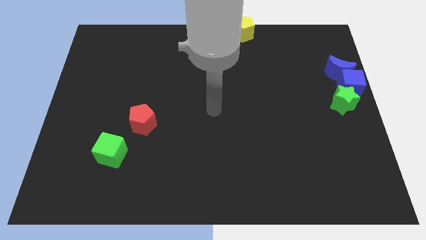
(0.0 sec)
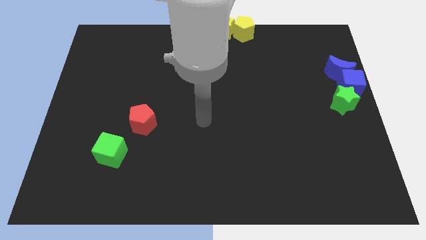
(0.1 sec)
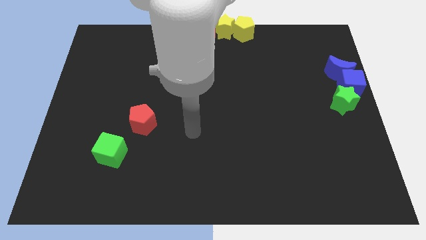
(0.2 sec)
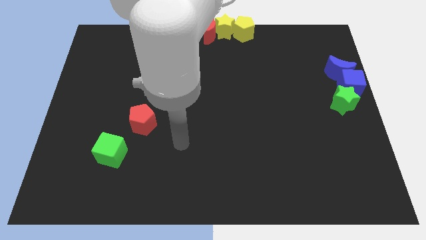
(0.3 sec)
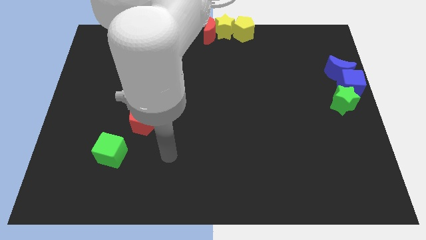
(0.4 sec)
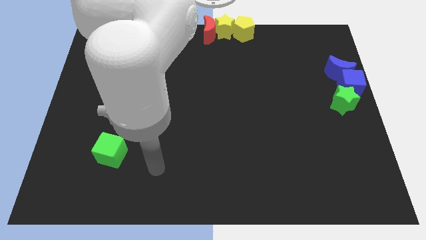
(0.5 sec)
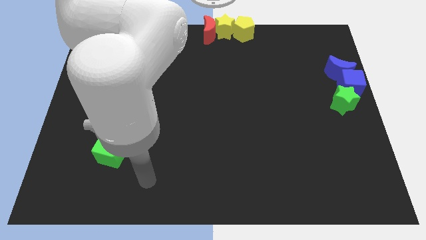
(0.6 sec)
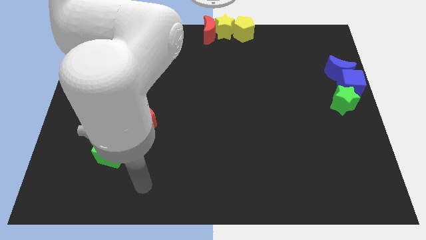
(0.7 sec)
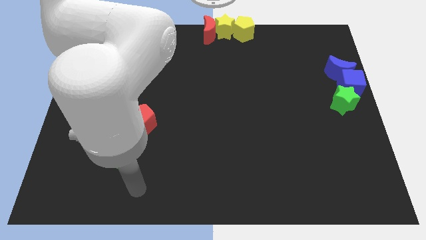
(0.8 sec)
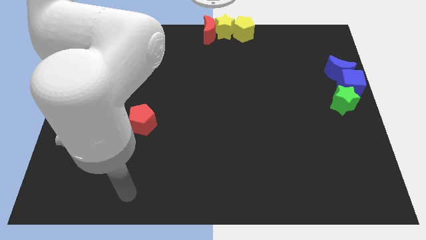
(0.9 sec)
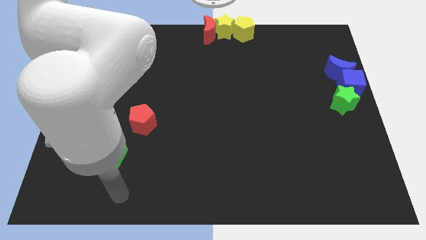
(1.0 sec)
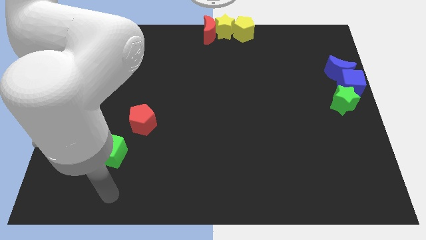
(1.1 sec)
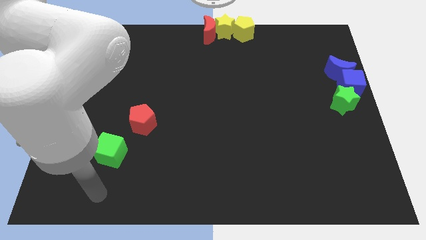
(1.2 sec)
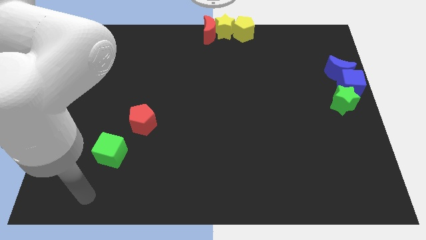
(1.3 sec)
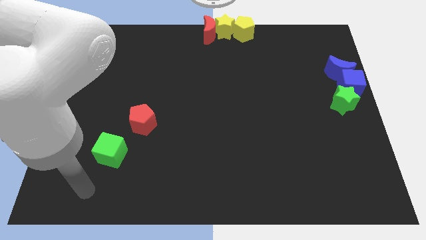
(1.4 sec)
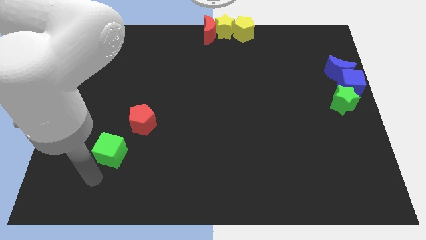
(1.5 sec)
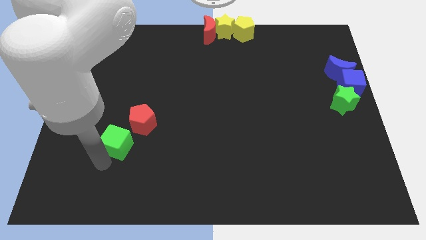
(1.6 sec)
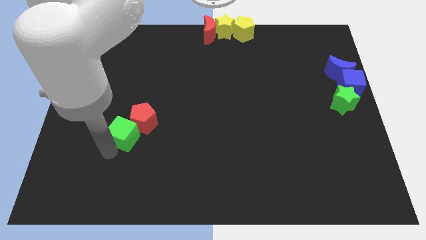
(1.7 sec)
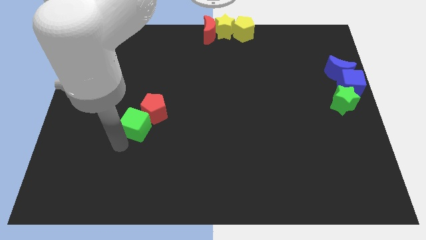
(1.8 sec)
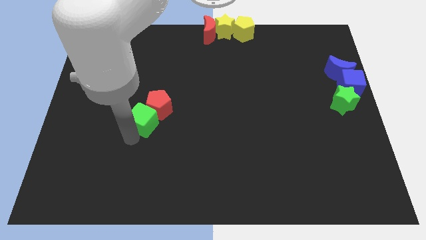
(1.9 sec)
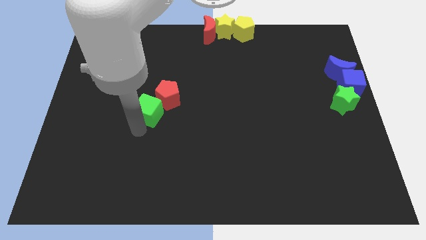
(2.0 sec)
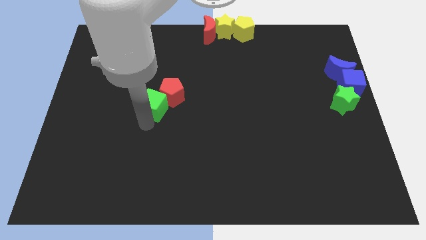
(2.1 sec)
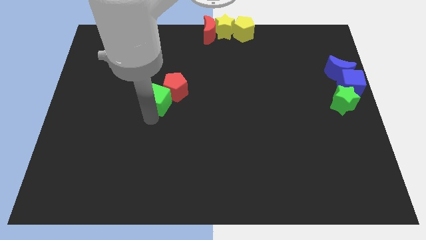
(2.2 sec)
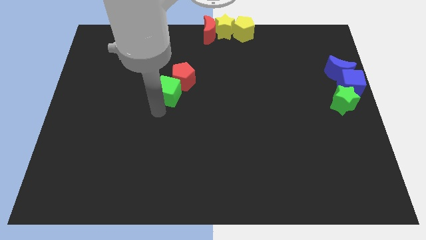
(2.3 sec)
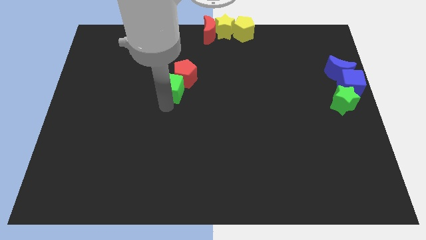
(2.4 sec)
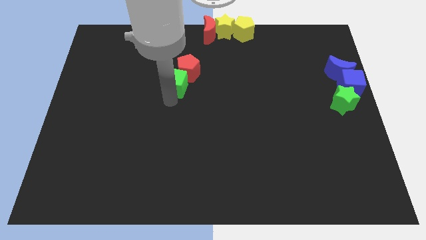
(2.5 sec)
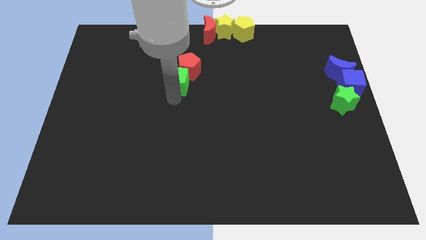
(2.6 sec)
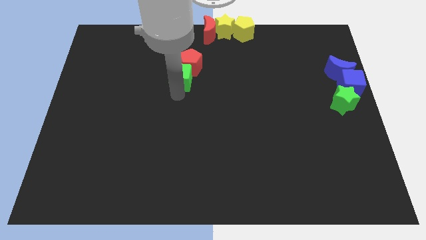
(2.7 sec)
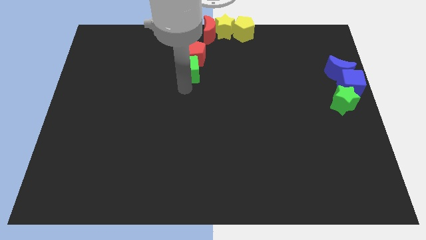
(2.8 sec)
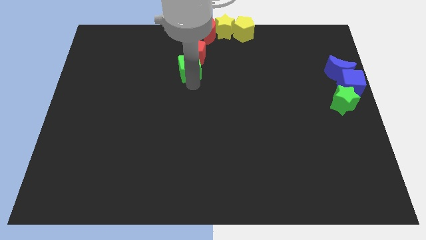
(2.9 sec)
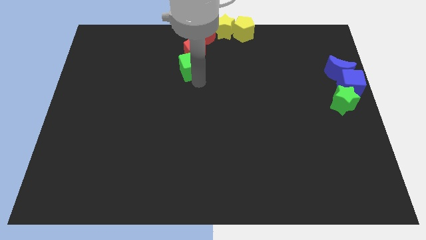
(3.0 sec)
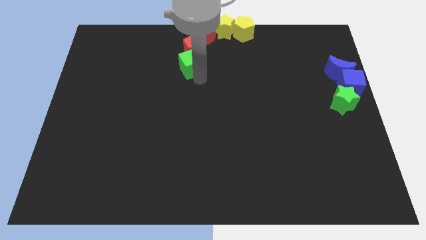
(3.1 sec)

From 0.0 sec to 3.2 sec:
drag the green cube and red pentagon together to the top side of the board

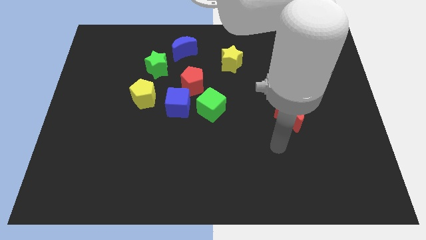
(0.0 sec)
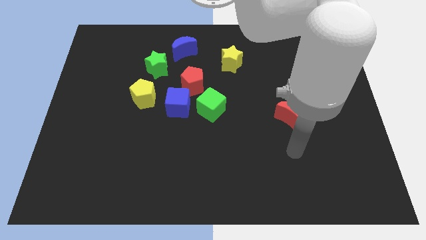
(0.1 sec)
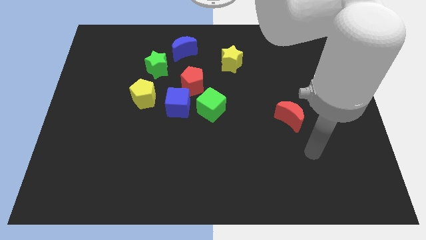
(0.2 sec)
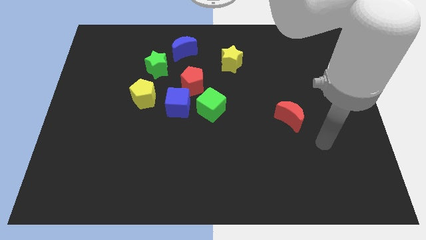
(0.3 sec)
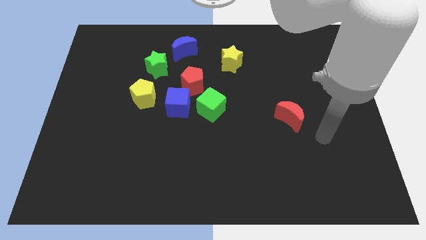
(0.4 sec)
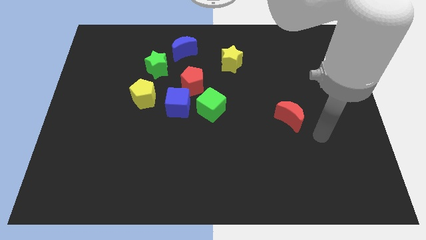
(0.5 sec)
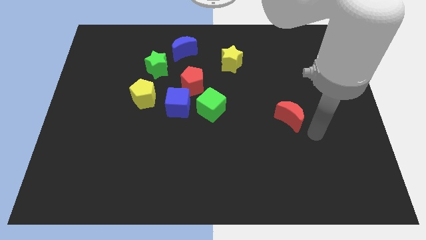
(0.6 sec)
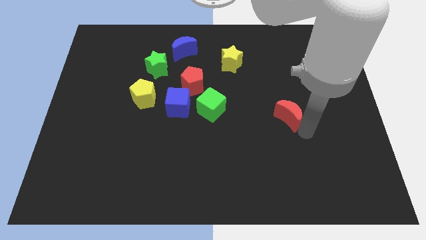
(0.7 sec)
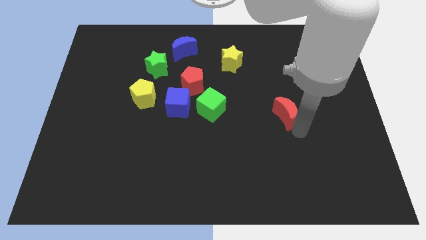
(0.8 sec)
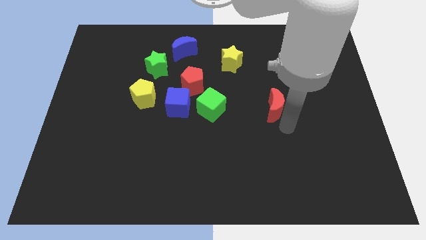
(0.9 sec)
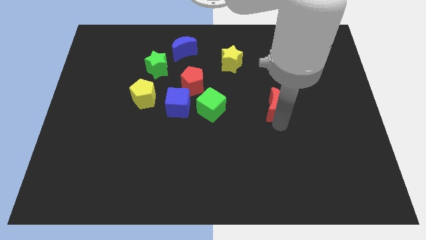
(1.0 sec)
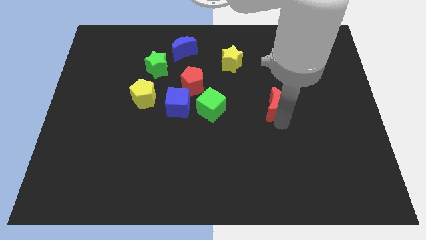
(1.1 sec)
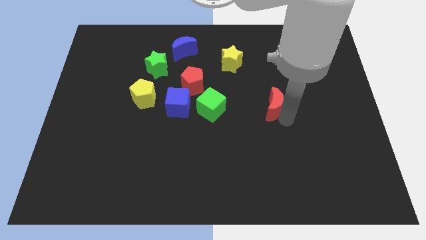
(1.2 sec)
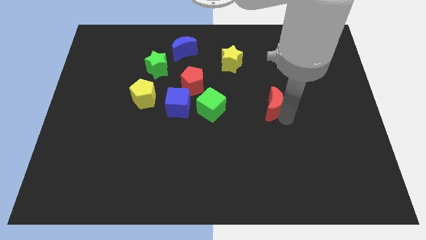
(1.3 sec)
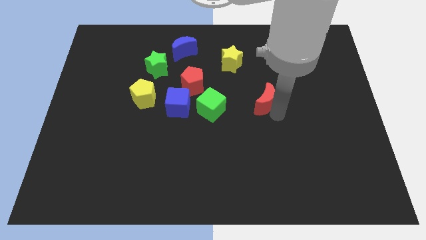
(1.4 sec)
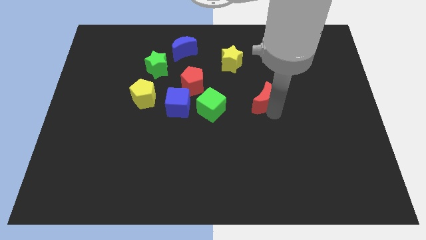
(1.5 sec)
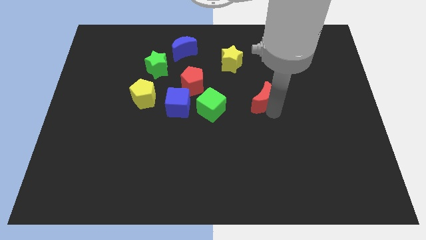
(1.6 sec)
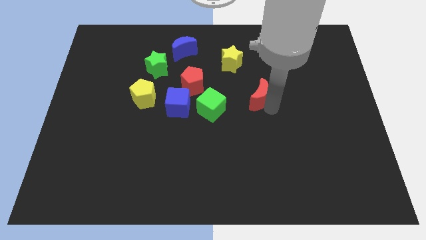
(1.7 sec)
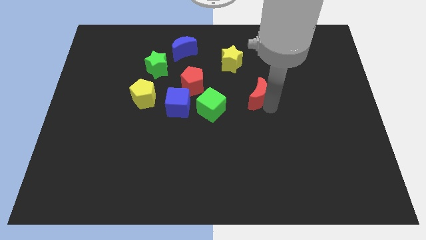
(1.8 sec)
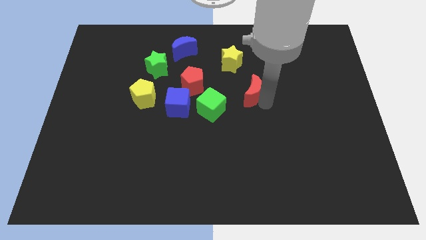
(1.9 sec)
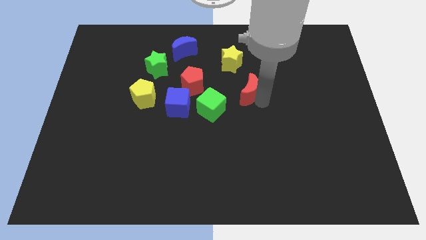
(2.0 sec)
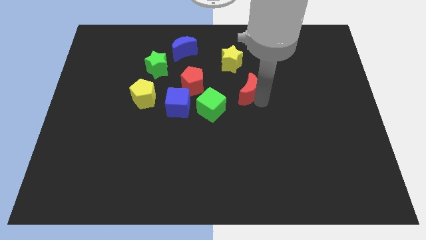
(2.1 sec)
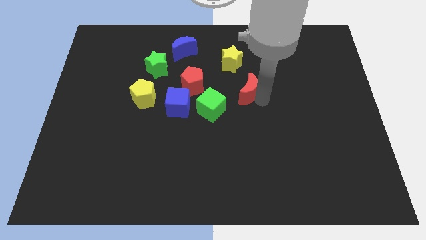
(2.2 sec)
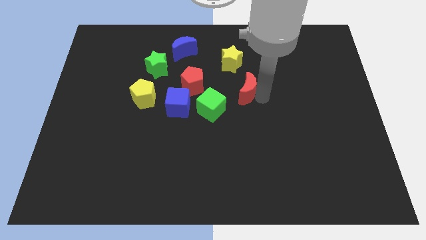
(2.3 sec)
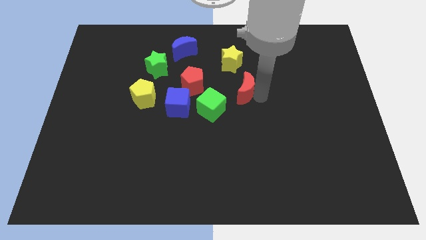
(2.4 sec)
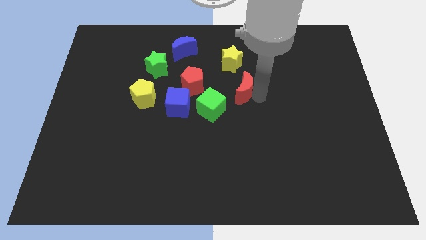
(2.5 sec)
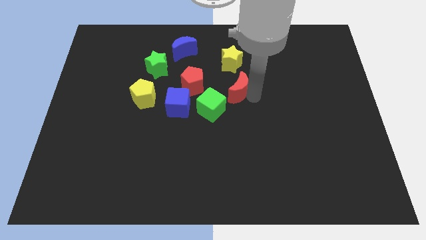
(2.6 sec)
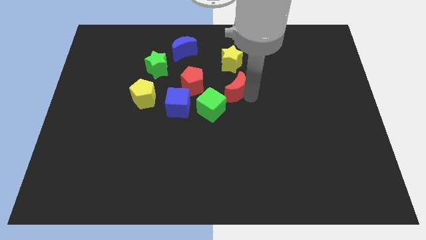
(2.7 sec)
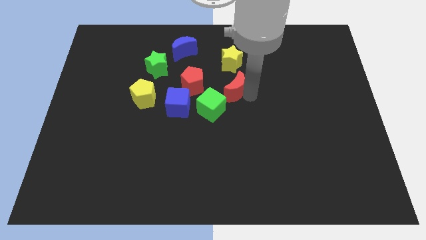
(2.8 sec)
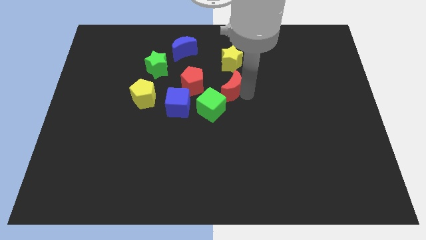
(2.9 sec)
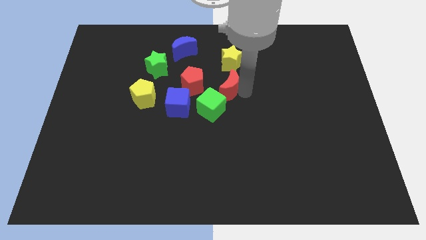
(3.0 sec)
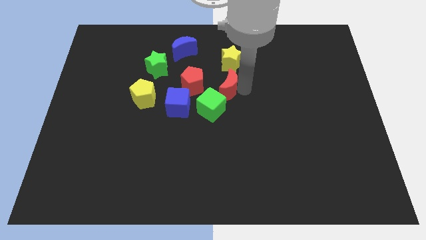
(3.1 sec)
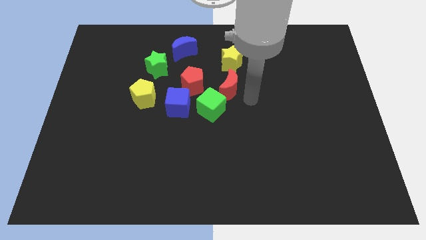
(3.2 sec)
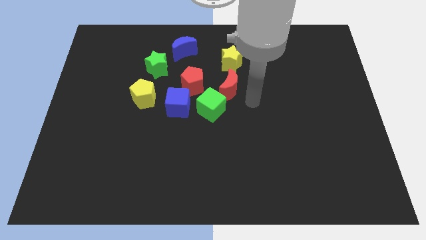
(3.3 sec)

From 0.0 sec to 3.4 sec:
push red crescent in between of yellow star green cube

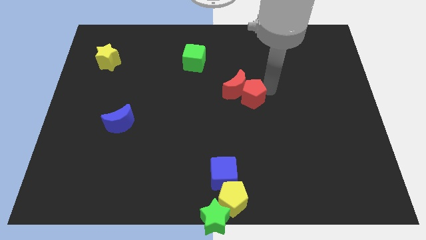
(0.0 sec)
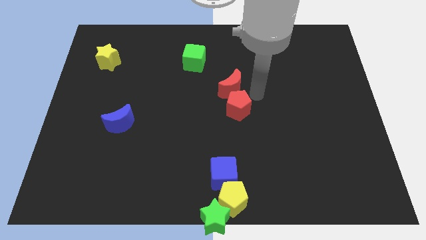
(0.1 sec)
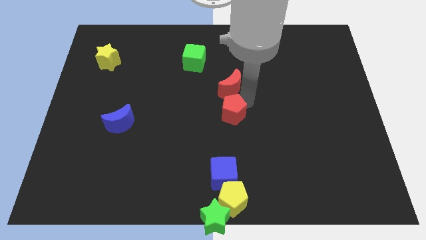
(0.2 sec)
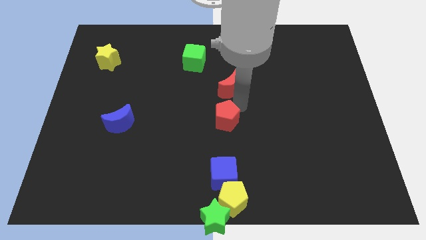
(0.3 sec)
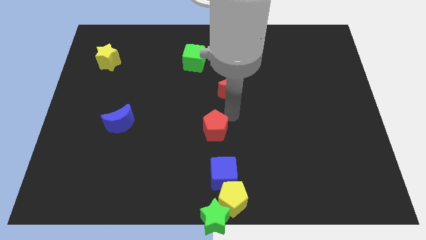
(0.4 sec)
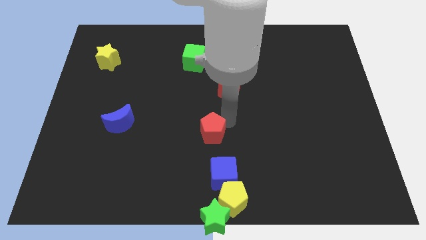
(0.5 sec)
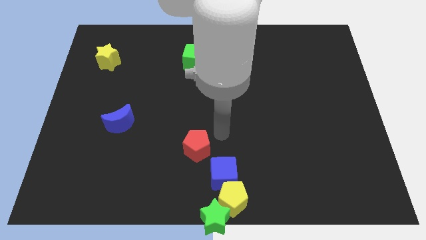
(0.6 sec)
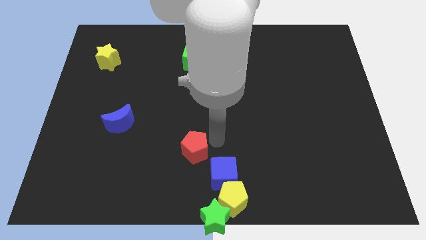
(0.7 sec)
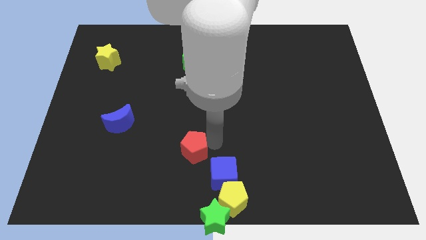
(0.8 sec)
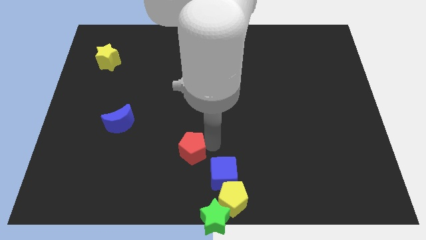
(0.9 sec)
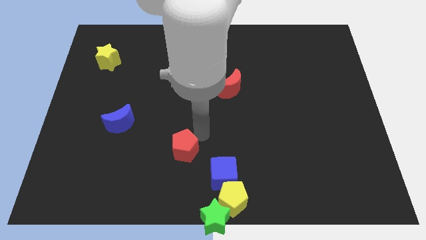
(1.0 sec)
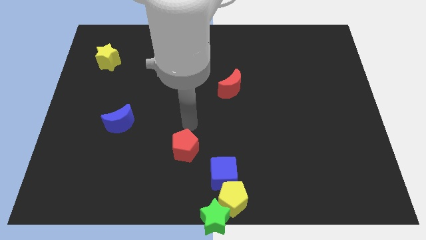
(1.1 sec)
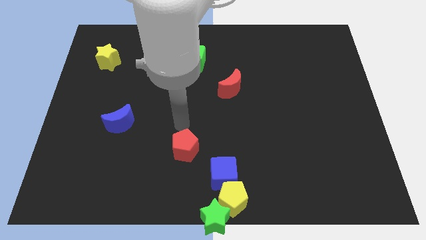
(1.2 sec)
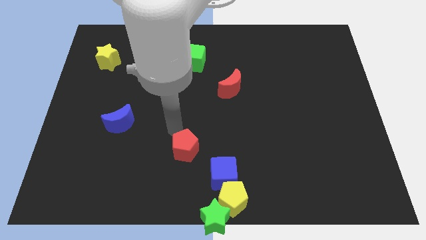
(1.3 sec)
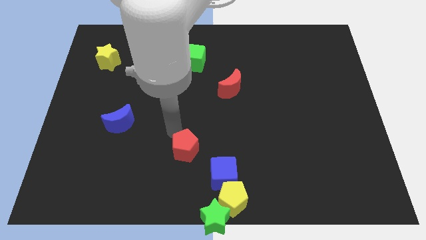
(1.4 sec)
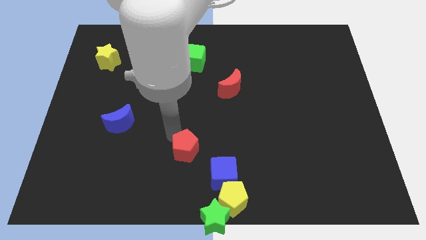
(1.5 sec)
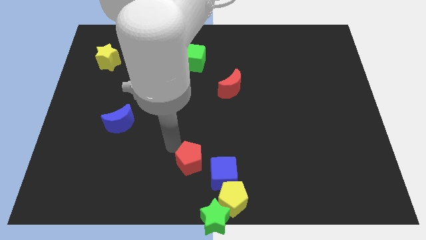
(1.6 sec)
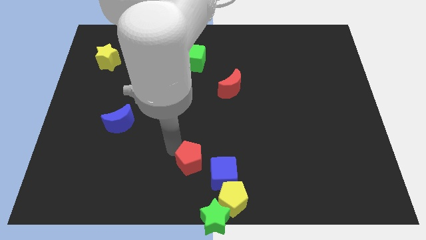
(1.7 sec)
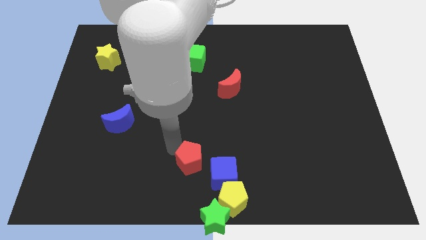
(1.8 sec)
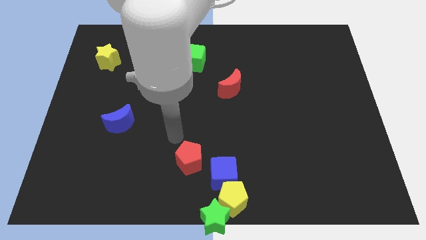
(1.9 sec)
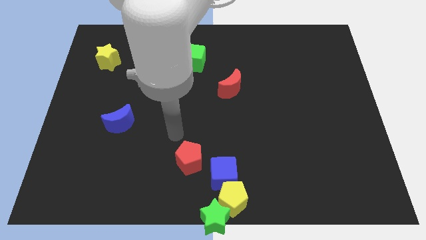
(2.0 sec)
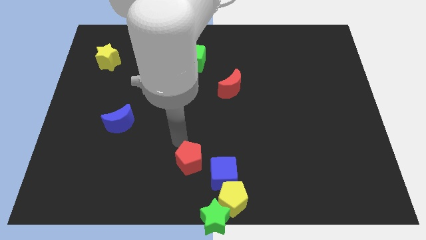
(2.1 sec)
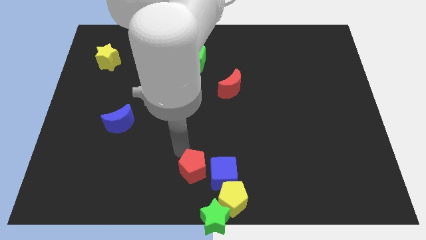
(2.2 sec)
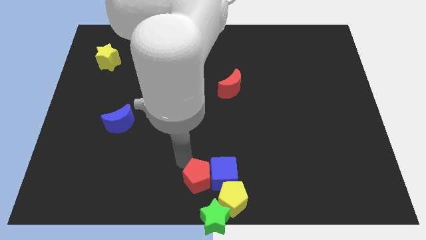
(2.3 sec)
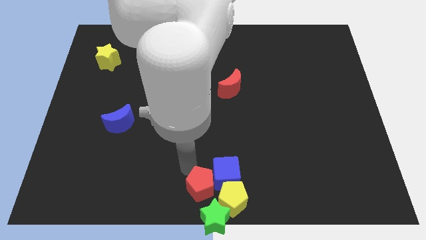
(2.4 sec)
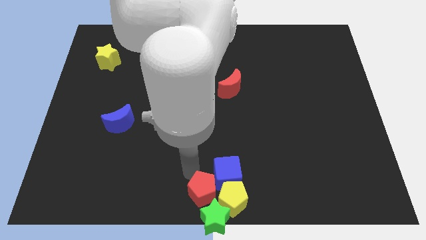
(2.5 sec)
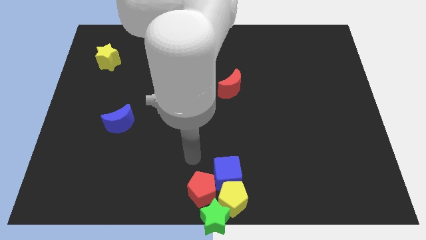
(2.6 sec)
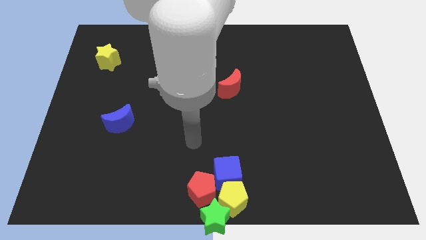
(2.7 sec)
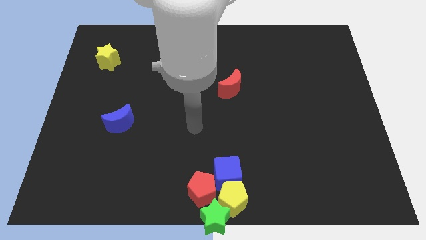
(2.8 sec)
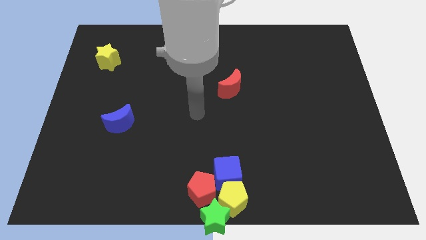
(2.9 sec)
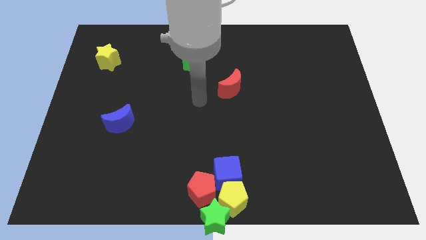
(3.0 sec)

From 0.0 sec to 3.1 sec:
move the red pentagon to the left side of the yellow pentagon
